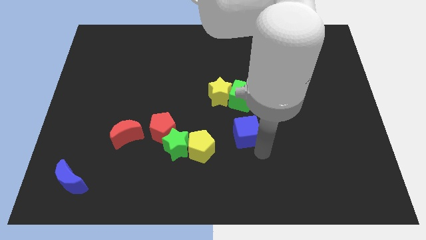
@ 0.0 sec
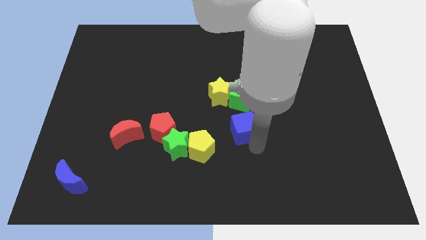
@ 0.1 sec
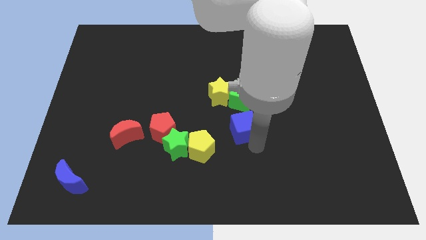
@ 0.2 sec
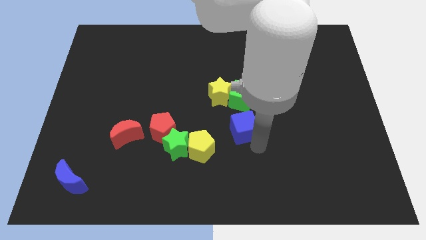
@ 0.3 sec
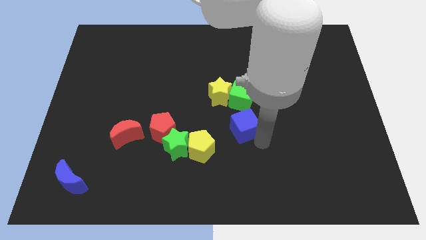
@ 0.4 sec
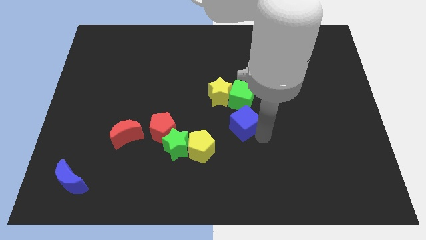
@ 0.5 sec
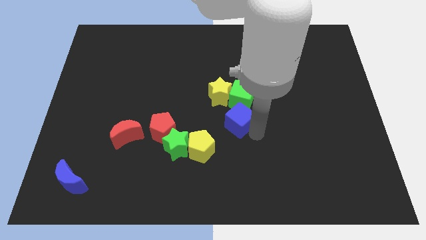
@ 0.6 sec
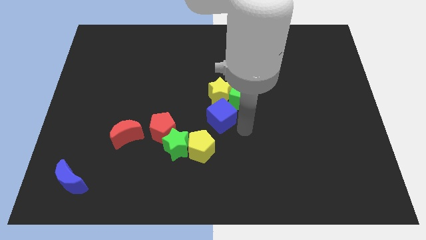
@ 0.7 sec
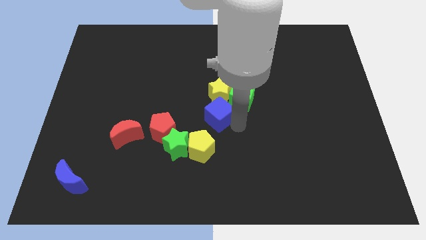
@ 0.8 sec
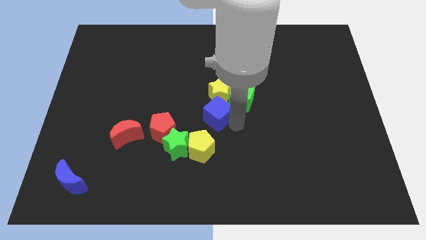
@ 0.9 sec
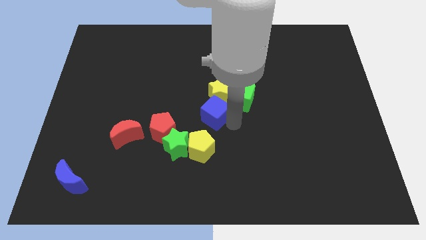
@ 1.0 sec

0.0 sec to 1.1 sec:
place the blue cube below the yellow star

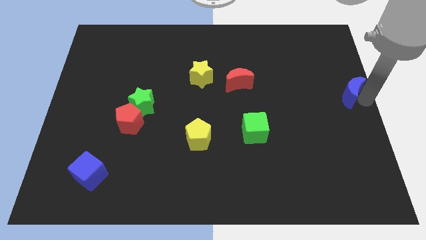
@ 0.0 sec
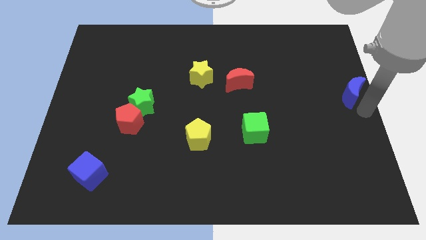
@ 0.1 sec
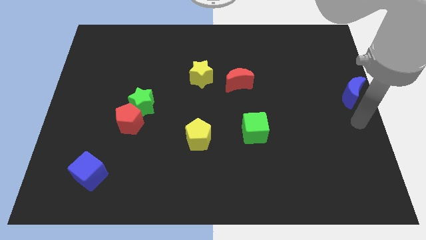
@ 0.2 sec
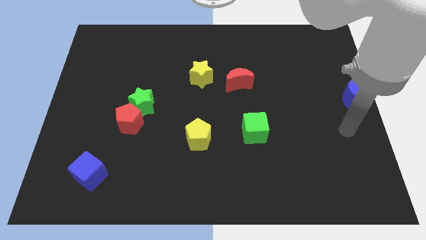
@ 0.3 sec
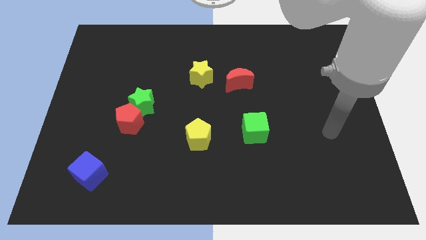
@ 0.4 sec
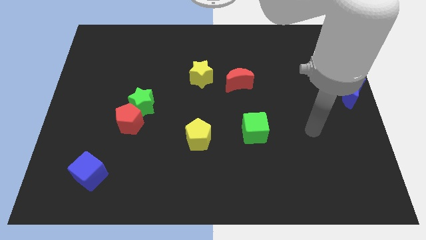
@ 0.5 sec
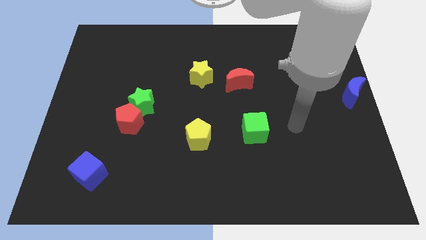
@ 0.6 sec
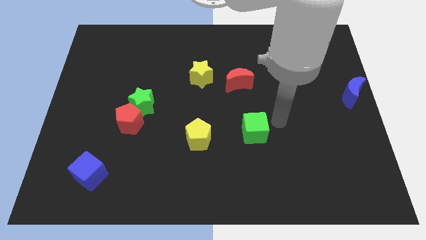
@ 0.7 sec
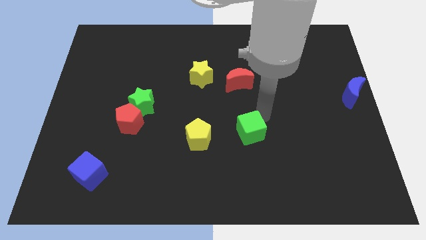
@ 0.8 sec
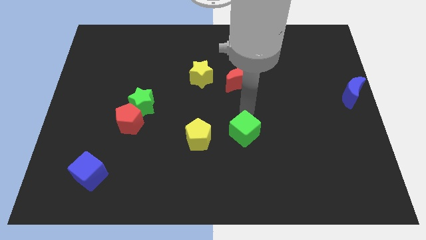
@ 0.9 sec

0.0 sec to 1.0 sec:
gently tap at the top side of the green star

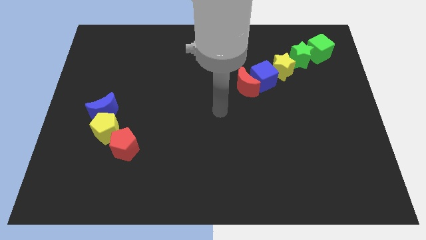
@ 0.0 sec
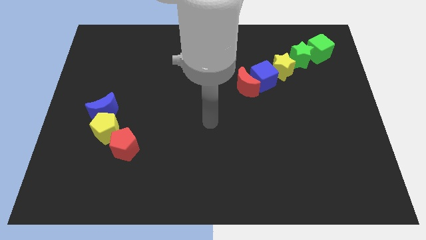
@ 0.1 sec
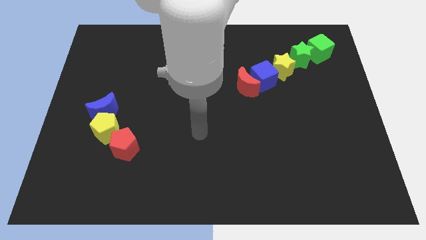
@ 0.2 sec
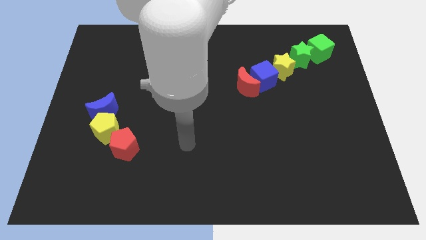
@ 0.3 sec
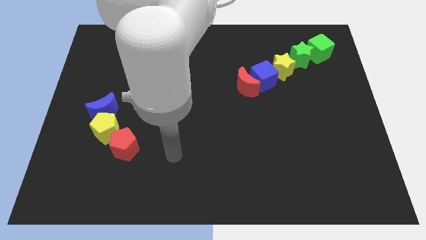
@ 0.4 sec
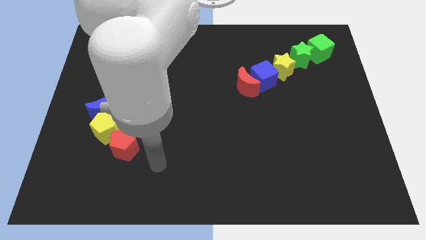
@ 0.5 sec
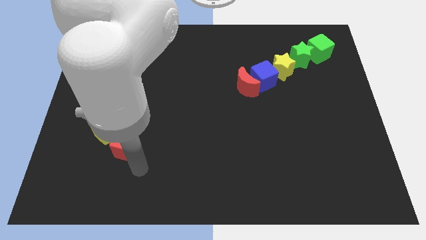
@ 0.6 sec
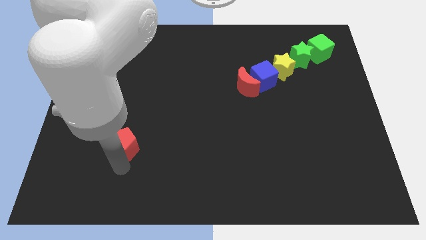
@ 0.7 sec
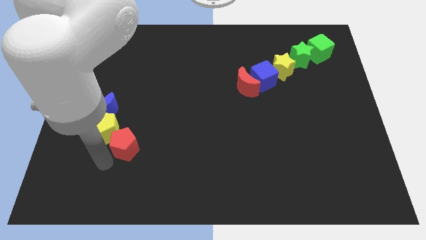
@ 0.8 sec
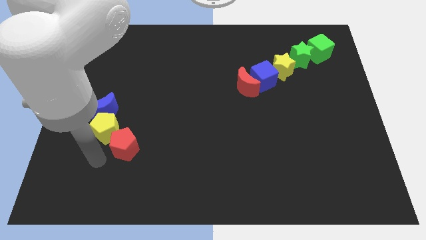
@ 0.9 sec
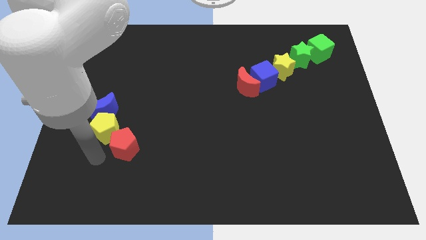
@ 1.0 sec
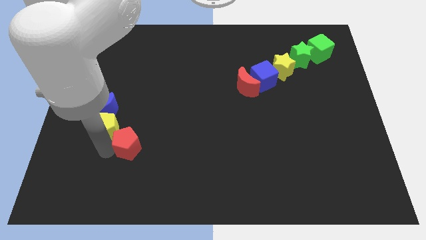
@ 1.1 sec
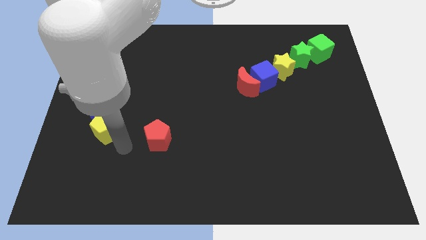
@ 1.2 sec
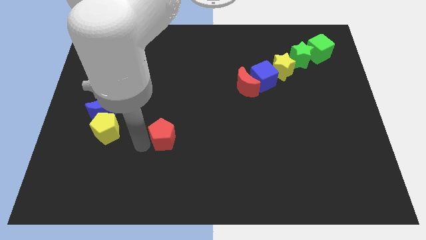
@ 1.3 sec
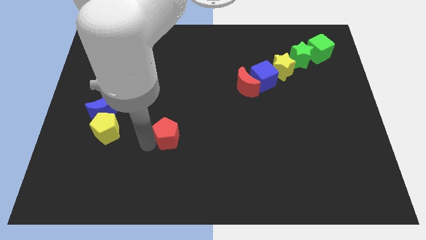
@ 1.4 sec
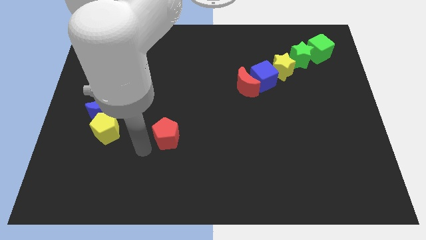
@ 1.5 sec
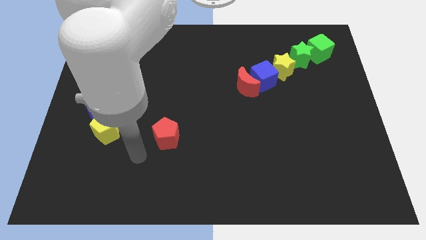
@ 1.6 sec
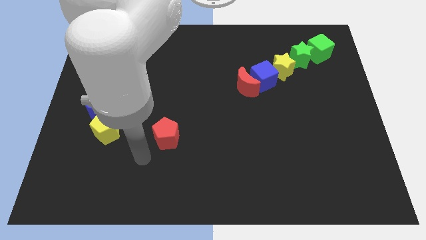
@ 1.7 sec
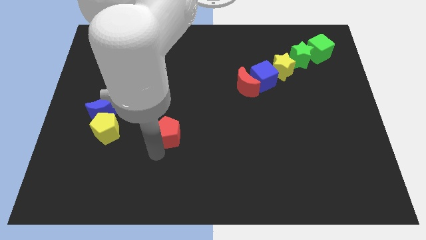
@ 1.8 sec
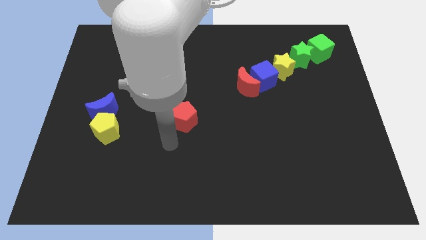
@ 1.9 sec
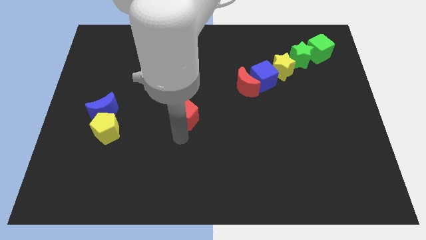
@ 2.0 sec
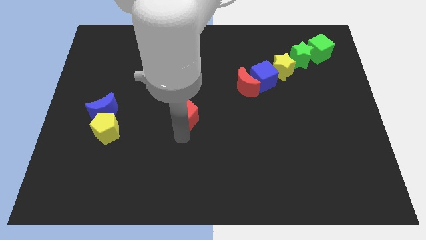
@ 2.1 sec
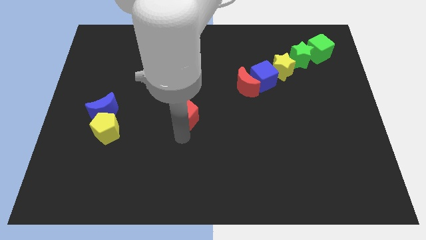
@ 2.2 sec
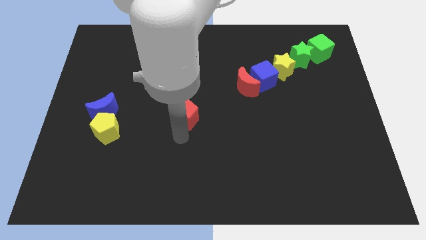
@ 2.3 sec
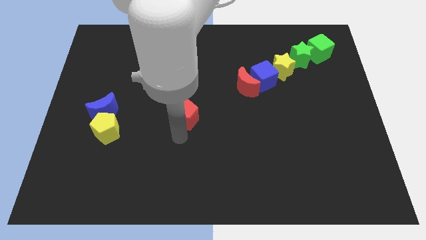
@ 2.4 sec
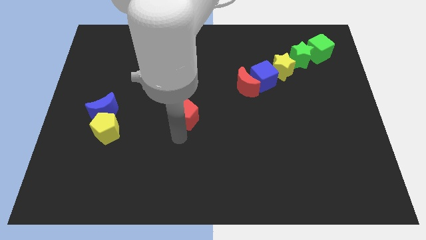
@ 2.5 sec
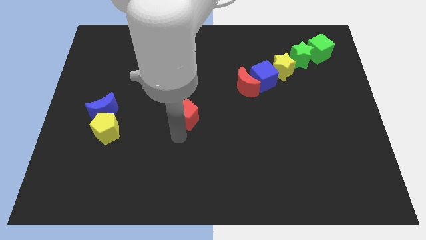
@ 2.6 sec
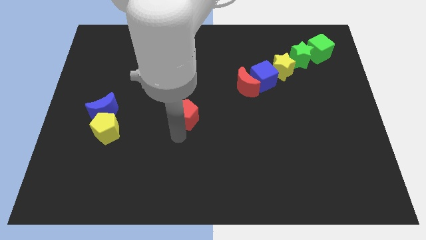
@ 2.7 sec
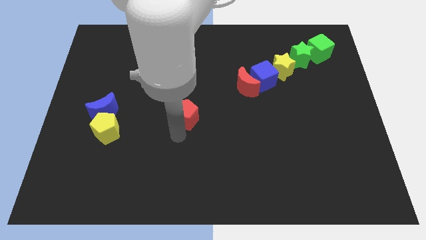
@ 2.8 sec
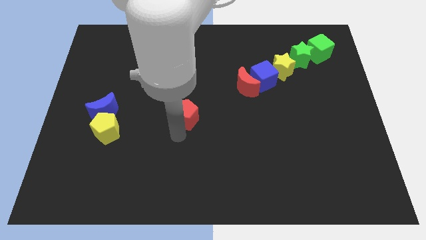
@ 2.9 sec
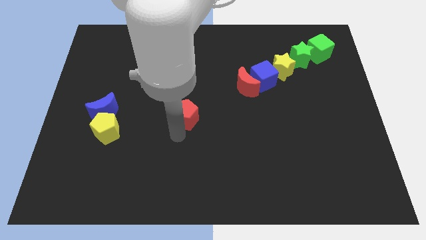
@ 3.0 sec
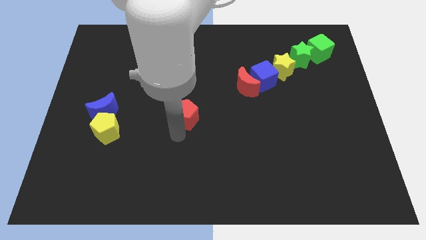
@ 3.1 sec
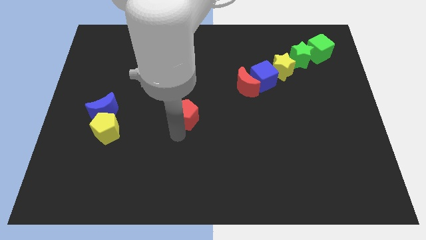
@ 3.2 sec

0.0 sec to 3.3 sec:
separate the red pentagon from the yellow pentagon

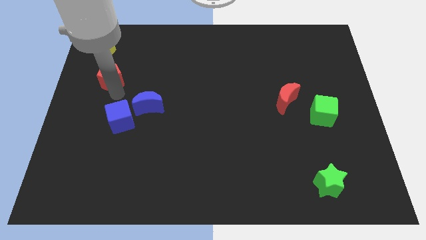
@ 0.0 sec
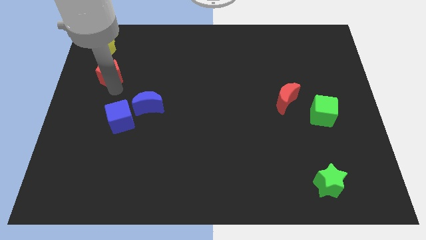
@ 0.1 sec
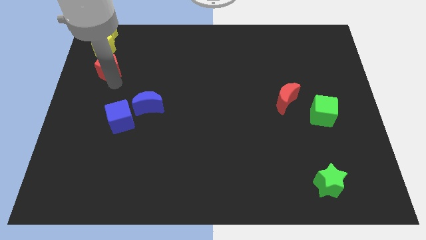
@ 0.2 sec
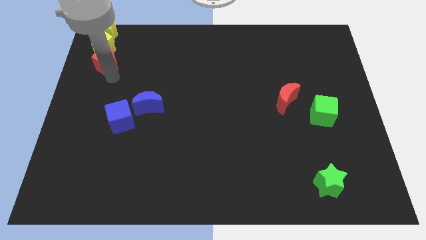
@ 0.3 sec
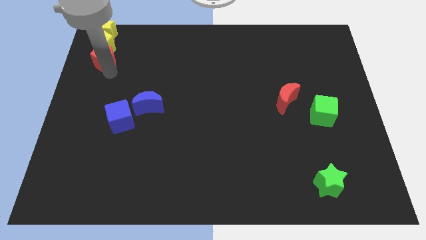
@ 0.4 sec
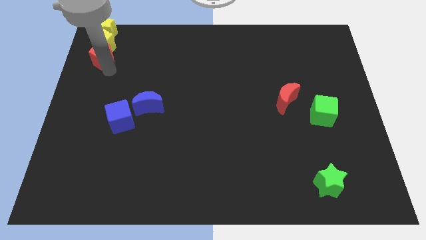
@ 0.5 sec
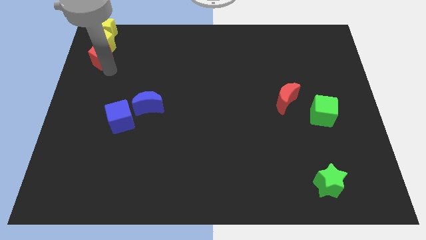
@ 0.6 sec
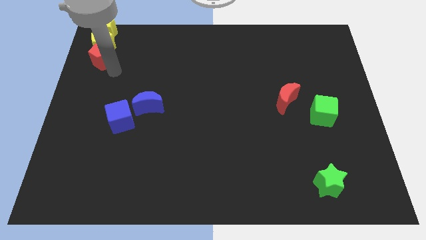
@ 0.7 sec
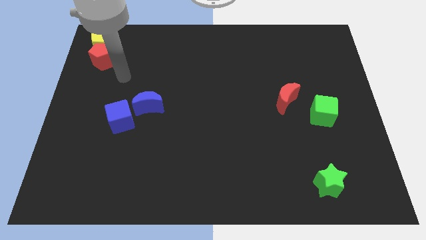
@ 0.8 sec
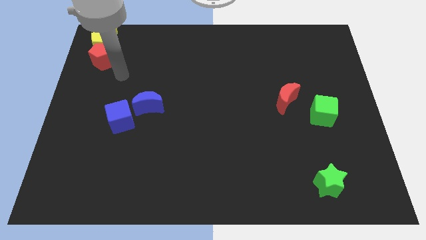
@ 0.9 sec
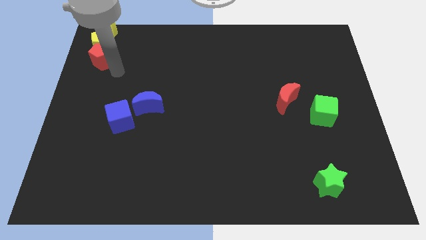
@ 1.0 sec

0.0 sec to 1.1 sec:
move red pentagon into yellow pentagon

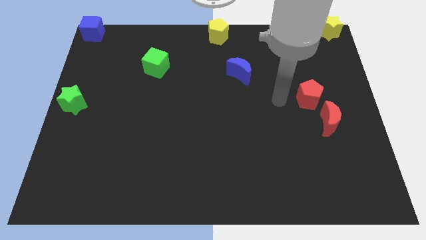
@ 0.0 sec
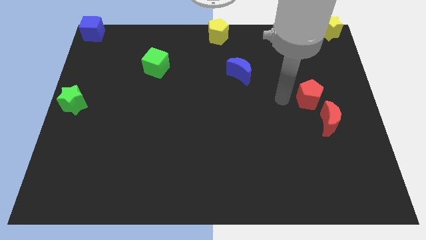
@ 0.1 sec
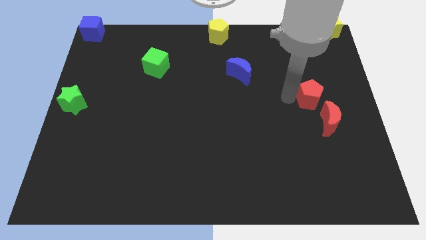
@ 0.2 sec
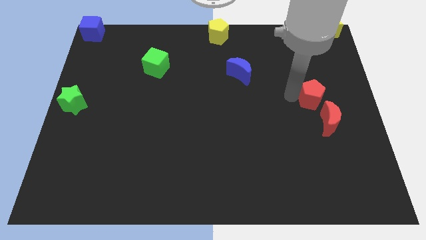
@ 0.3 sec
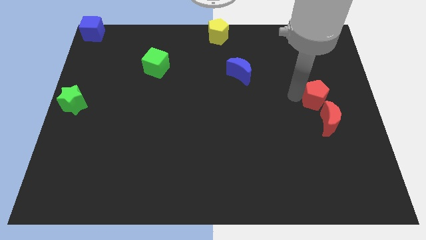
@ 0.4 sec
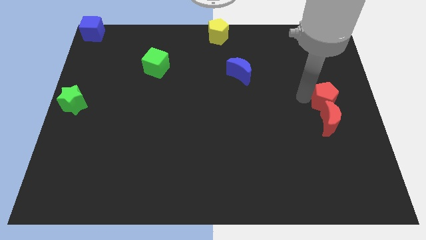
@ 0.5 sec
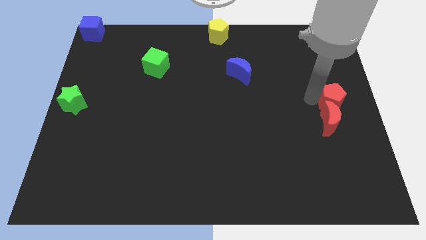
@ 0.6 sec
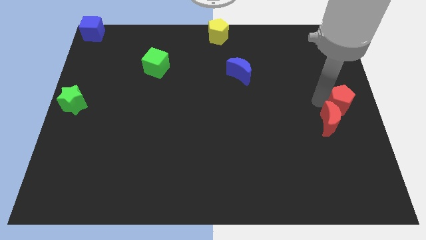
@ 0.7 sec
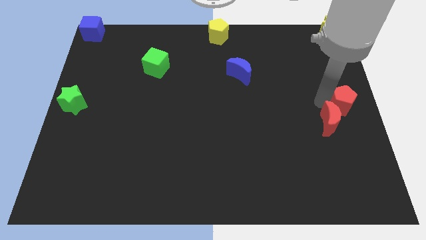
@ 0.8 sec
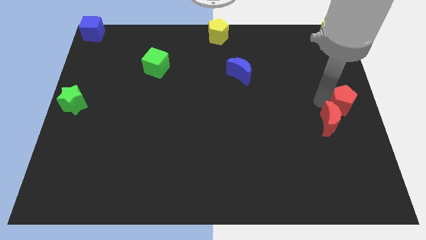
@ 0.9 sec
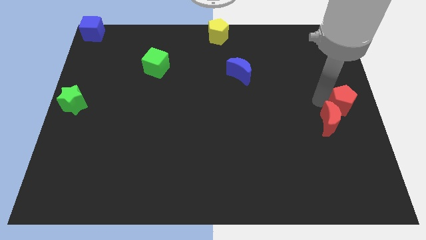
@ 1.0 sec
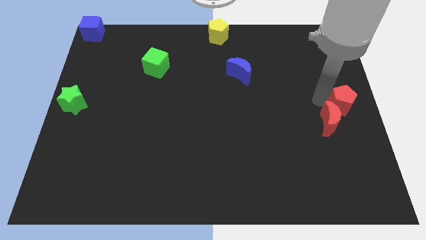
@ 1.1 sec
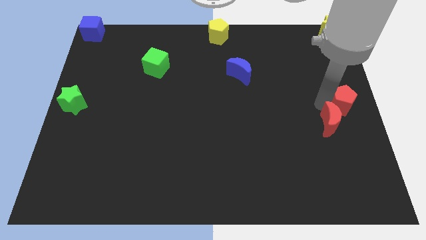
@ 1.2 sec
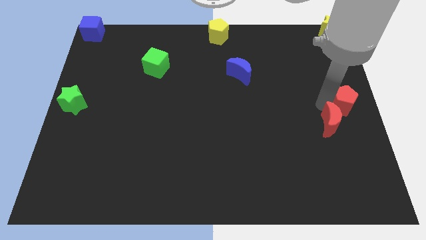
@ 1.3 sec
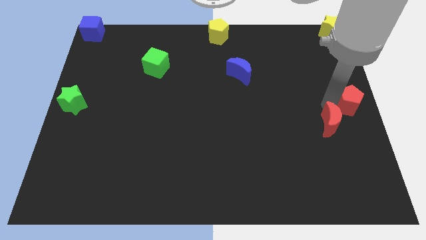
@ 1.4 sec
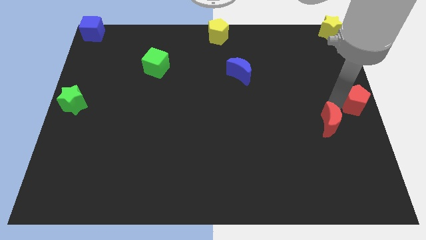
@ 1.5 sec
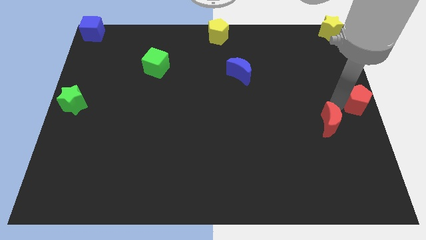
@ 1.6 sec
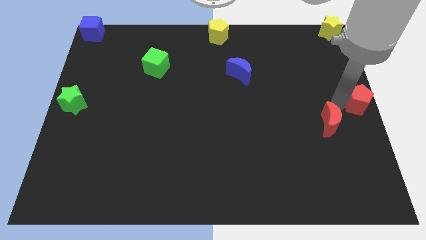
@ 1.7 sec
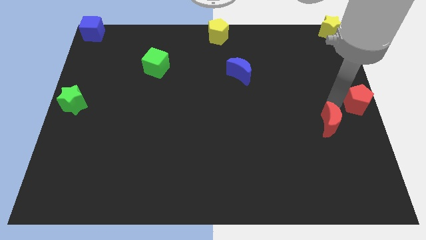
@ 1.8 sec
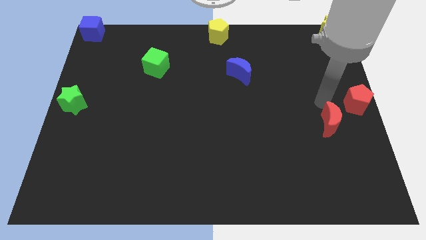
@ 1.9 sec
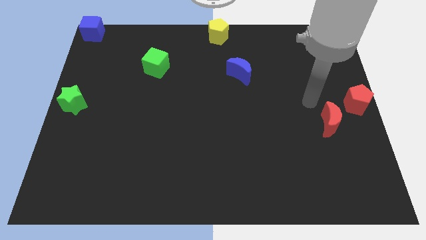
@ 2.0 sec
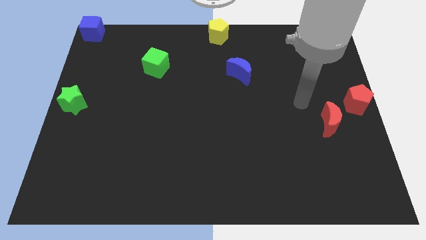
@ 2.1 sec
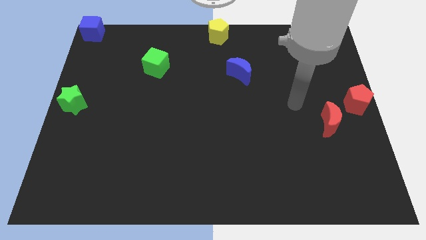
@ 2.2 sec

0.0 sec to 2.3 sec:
push the red pentagon to the right center of the board
